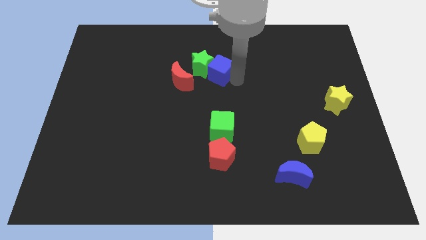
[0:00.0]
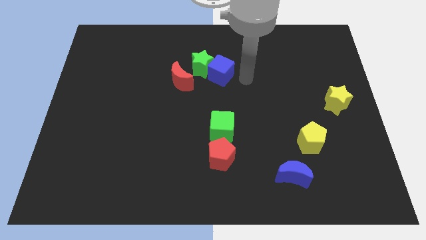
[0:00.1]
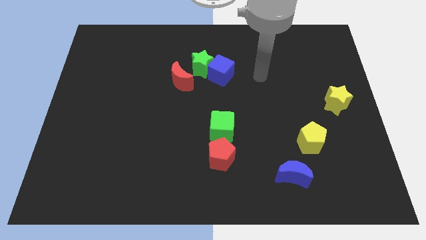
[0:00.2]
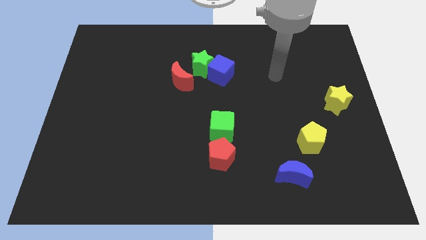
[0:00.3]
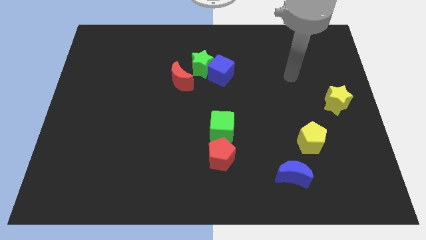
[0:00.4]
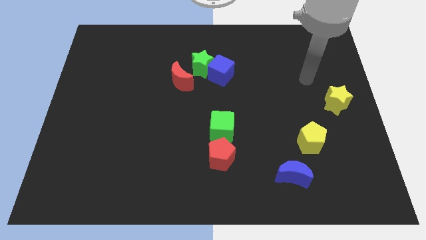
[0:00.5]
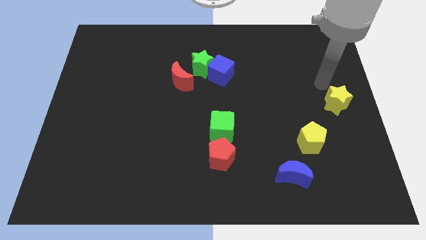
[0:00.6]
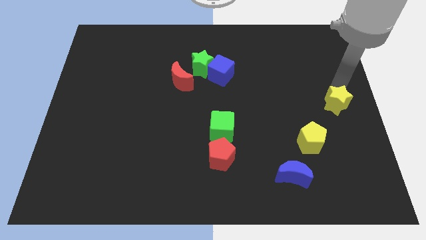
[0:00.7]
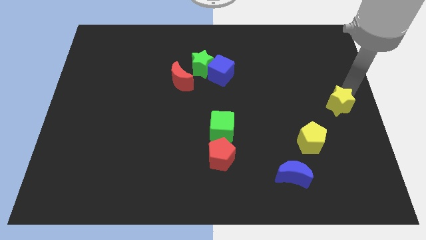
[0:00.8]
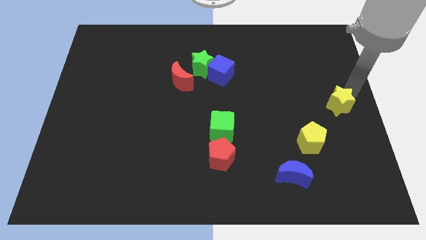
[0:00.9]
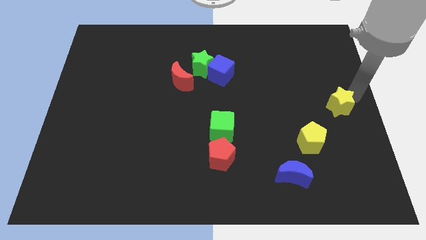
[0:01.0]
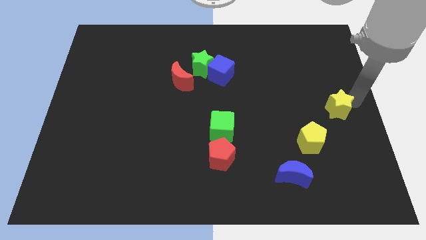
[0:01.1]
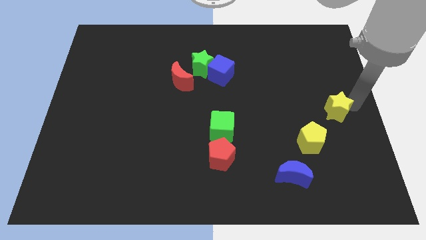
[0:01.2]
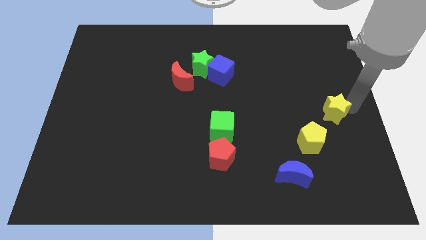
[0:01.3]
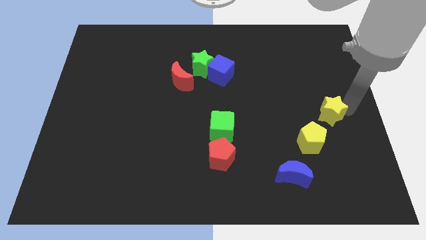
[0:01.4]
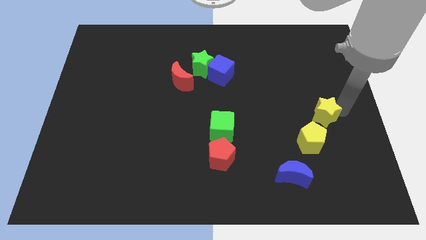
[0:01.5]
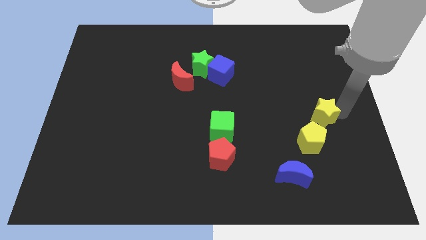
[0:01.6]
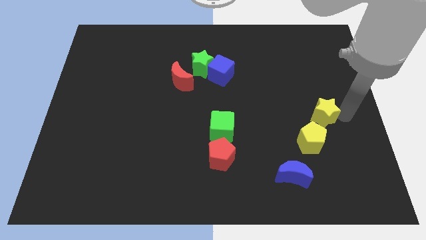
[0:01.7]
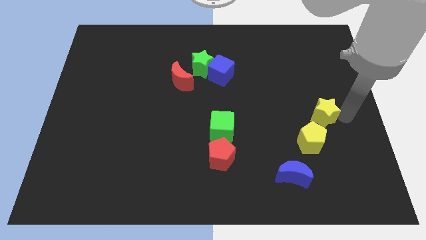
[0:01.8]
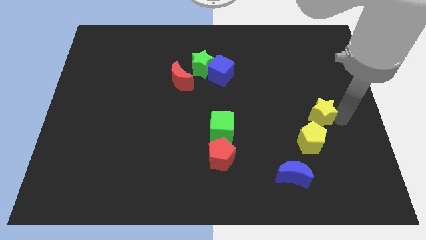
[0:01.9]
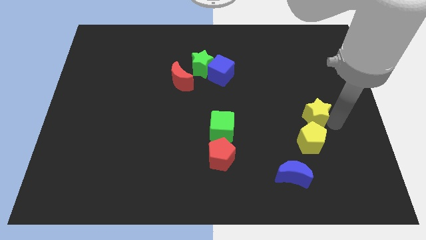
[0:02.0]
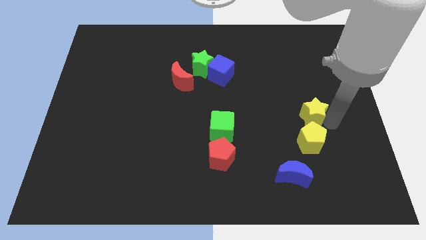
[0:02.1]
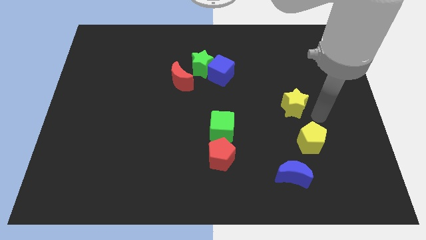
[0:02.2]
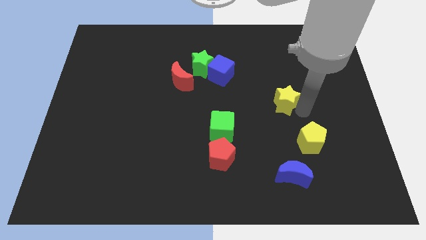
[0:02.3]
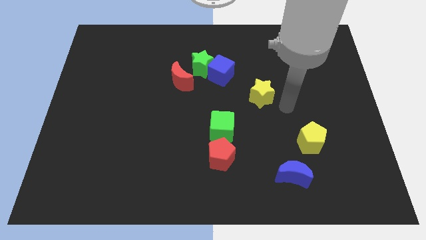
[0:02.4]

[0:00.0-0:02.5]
push the yellow star to the top right of the green cube

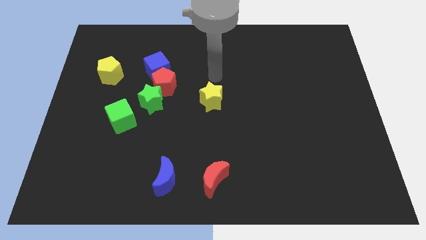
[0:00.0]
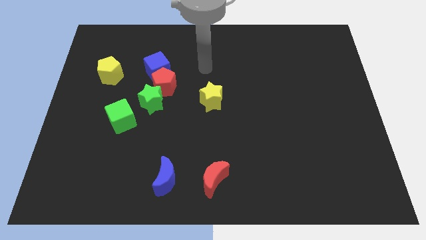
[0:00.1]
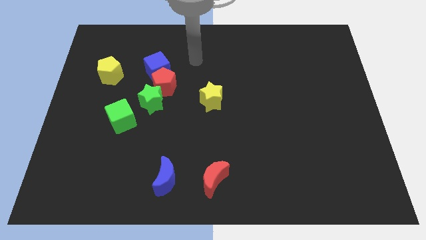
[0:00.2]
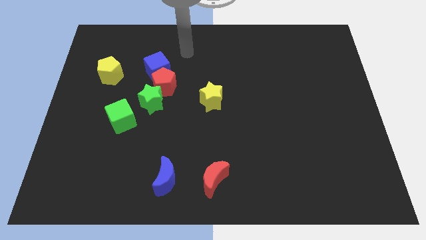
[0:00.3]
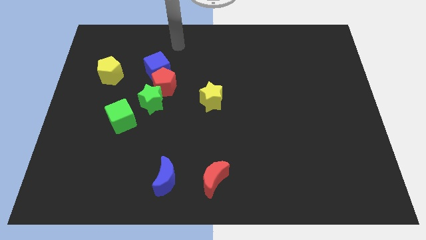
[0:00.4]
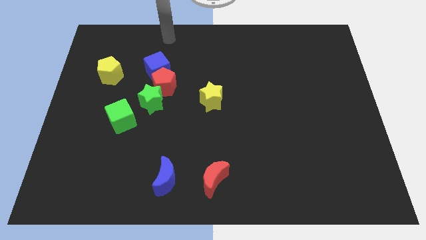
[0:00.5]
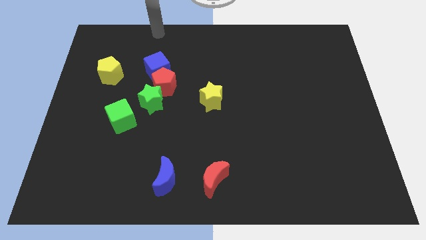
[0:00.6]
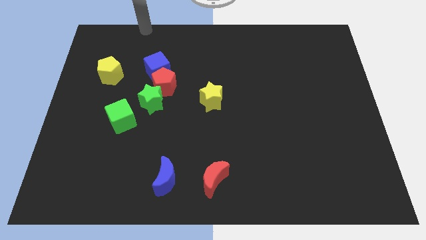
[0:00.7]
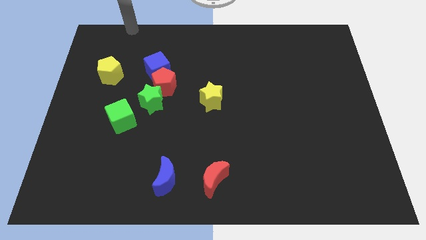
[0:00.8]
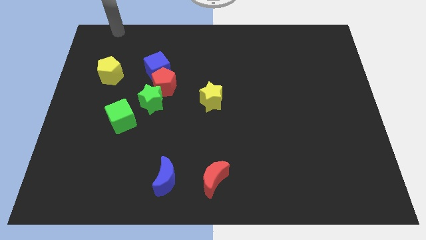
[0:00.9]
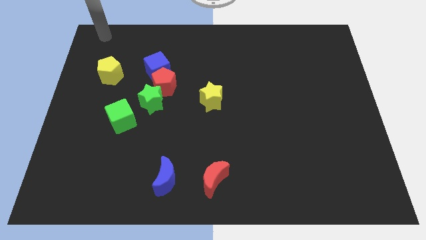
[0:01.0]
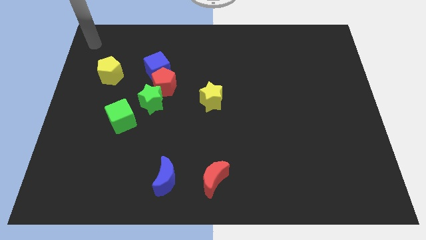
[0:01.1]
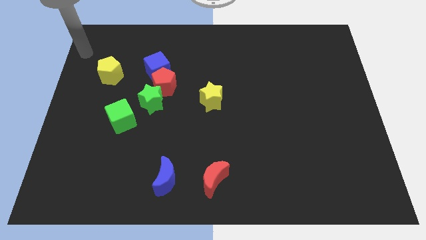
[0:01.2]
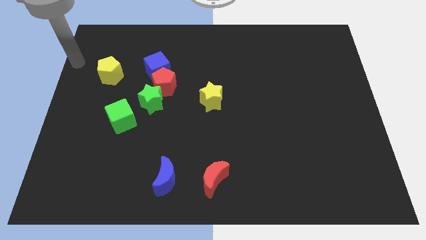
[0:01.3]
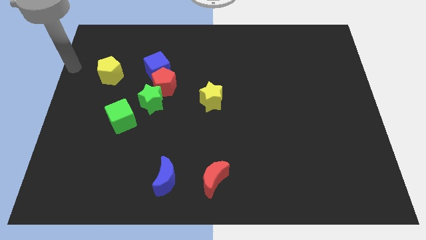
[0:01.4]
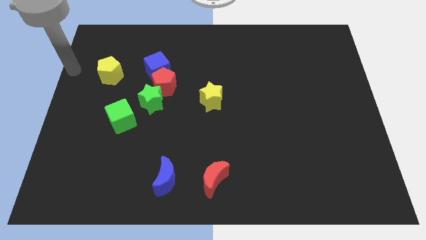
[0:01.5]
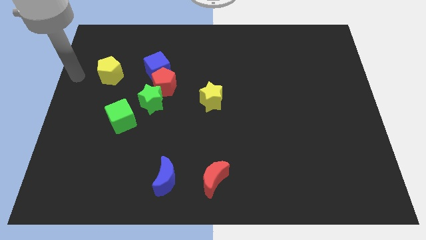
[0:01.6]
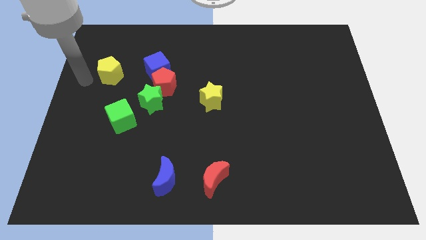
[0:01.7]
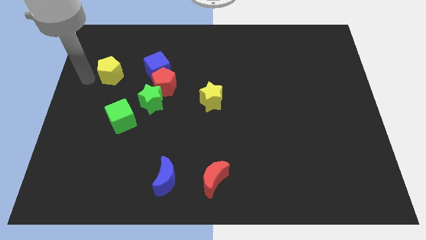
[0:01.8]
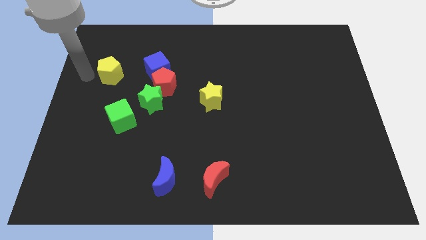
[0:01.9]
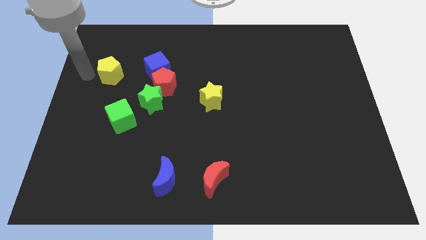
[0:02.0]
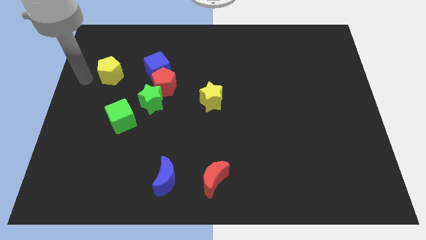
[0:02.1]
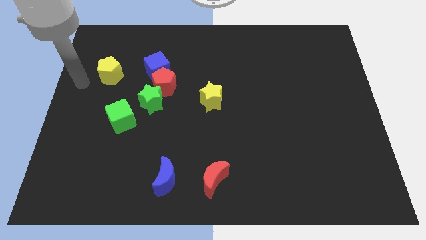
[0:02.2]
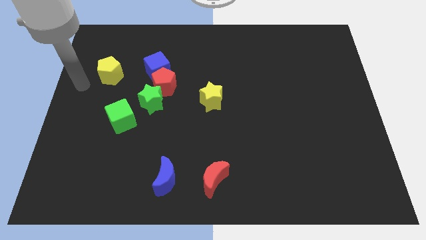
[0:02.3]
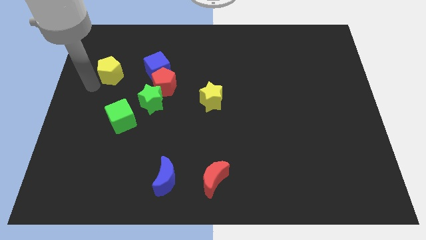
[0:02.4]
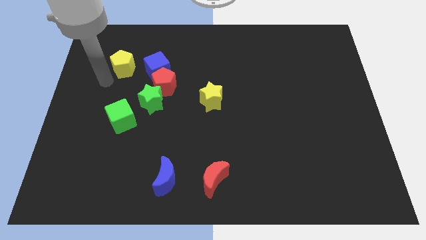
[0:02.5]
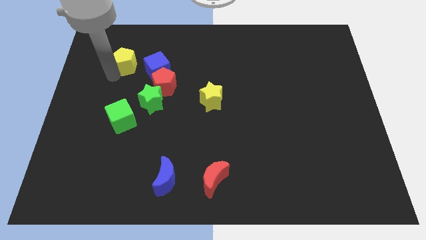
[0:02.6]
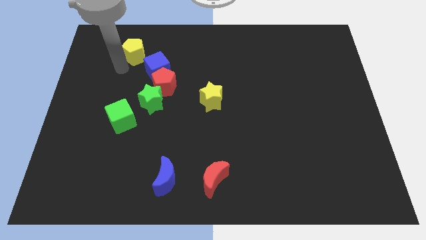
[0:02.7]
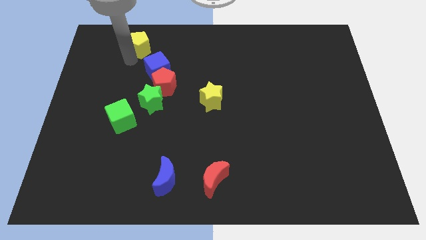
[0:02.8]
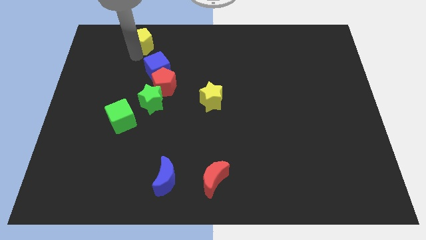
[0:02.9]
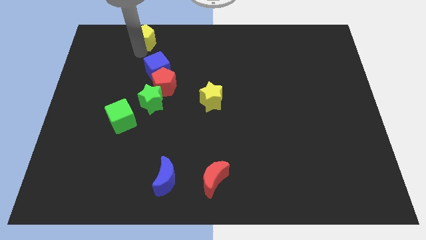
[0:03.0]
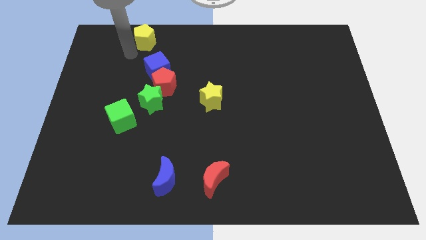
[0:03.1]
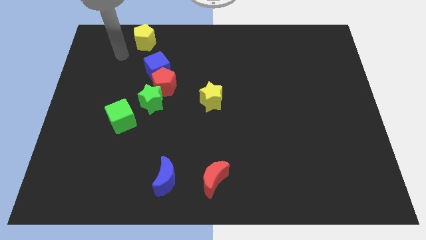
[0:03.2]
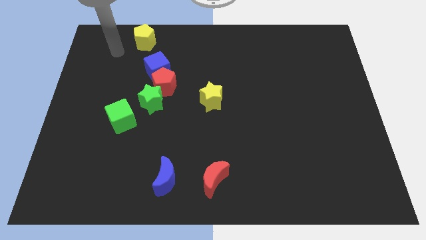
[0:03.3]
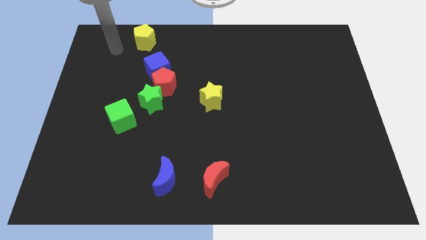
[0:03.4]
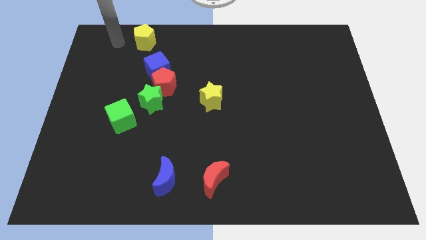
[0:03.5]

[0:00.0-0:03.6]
push the yellow pentagon towards the top left of the board

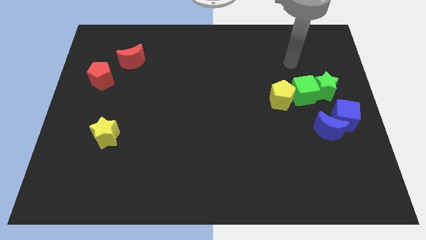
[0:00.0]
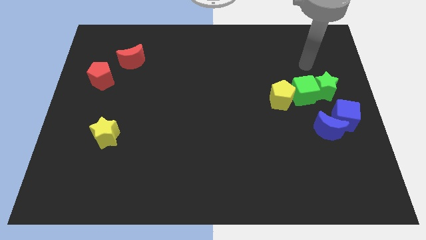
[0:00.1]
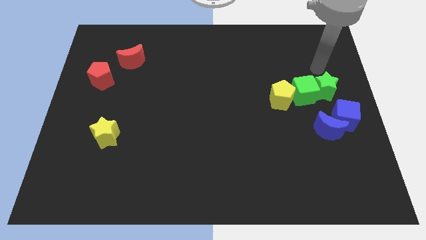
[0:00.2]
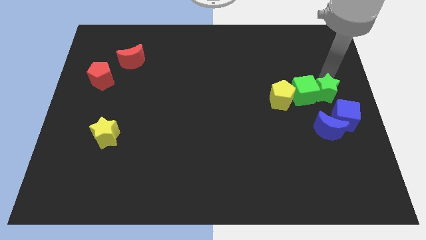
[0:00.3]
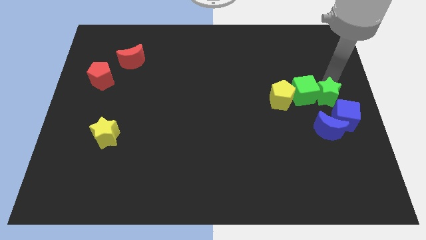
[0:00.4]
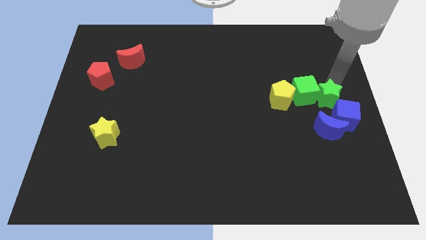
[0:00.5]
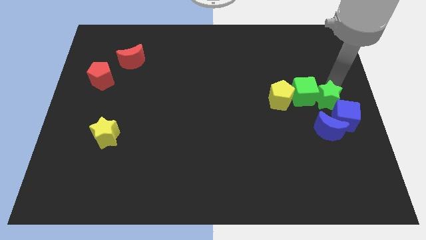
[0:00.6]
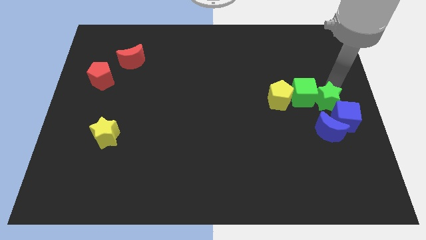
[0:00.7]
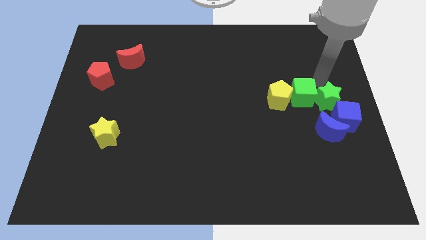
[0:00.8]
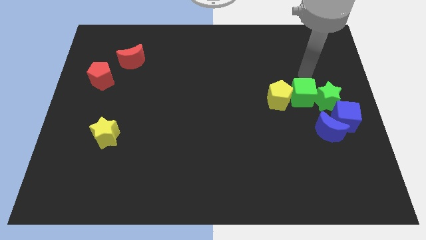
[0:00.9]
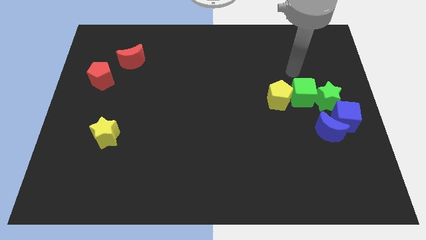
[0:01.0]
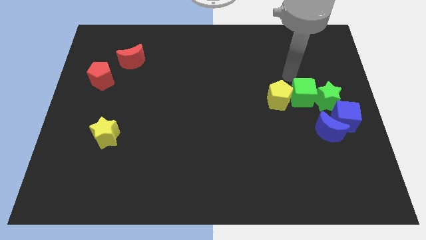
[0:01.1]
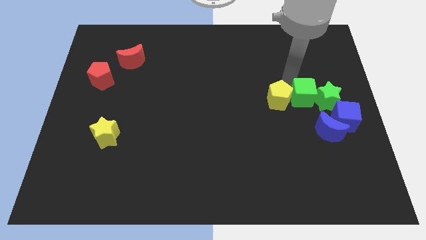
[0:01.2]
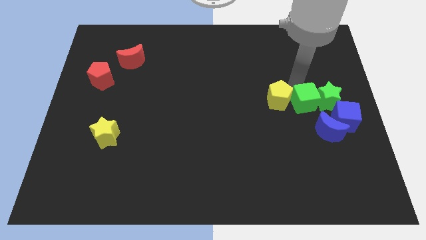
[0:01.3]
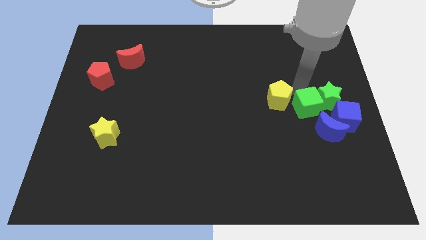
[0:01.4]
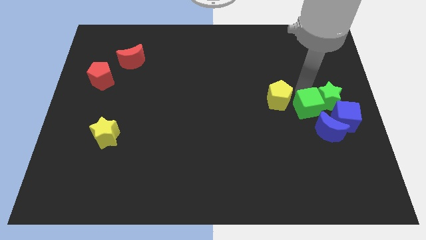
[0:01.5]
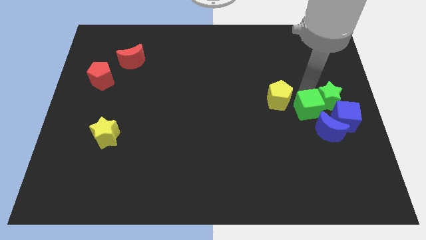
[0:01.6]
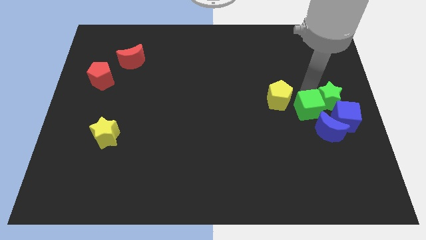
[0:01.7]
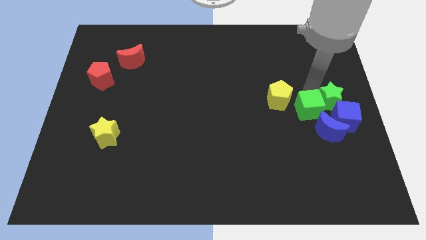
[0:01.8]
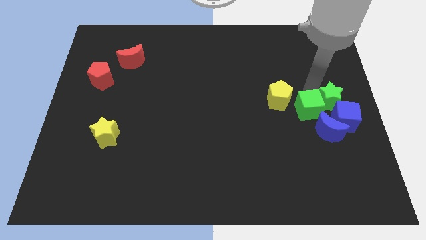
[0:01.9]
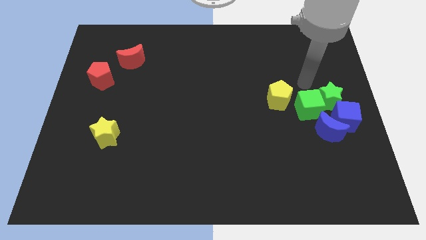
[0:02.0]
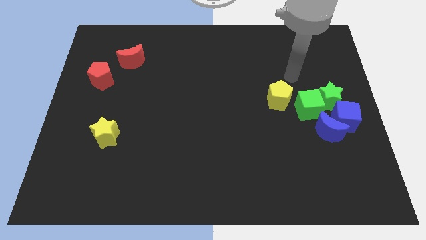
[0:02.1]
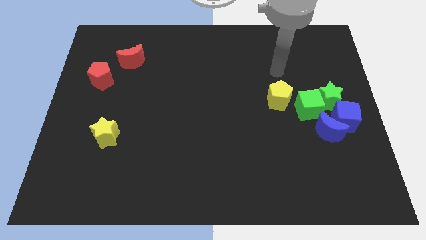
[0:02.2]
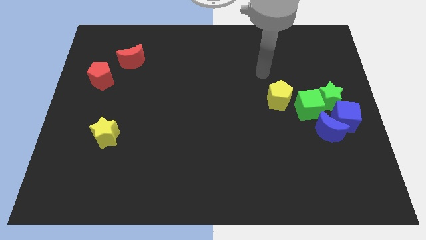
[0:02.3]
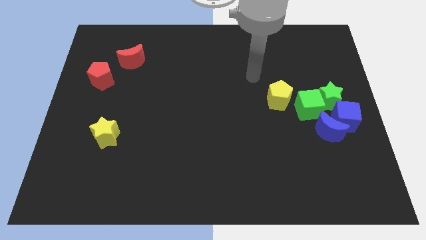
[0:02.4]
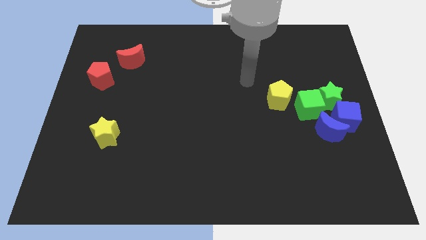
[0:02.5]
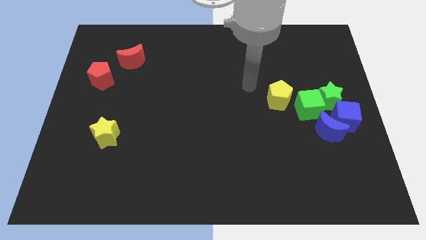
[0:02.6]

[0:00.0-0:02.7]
push the green blocks into the blue blocks

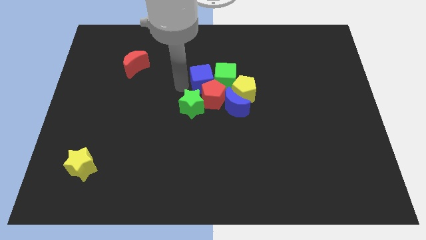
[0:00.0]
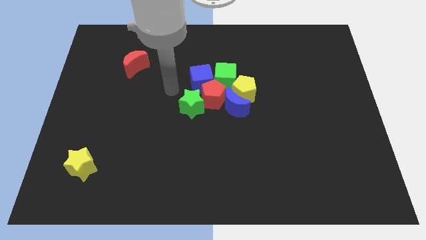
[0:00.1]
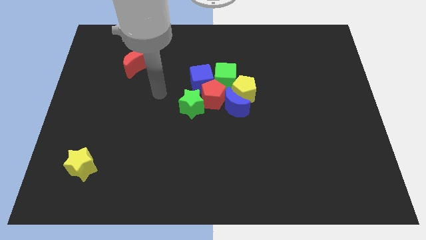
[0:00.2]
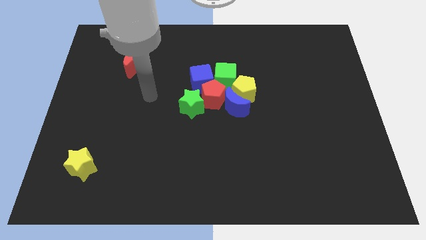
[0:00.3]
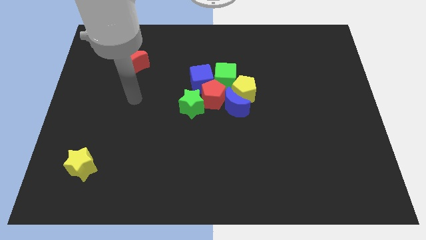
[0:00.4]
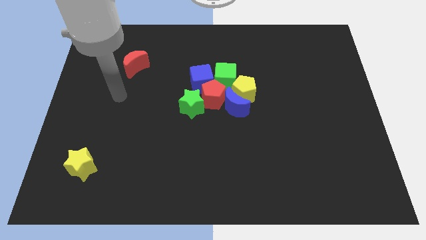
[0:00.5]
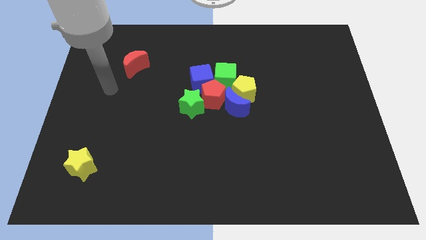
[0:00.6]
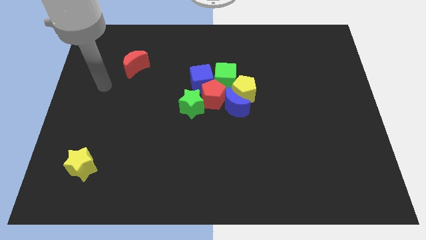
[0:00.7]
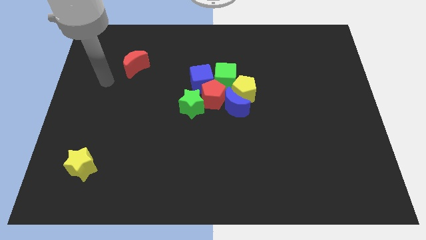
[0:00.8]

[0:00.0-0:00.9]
move the arm away from the blue cube
